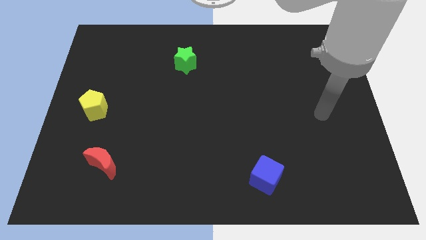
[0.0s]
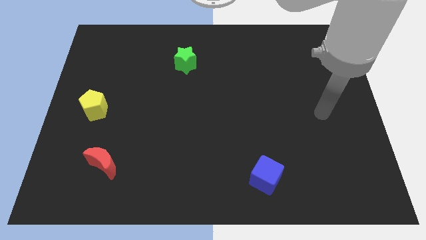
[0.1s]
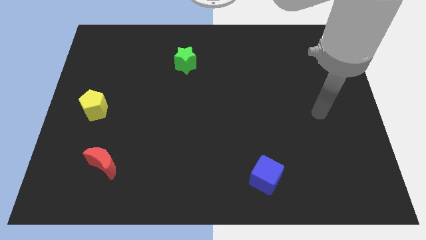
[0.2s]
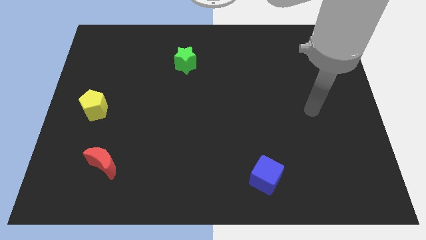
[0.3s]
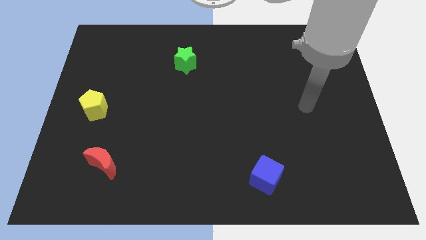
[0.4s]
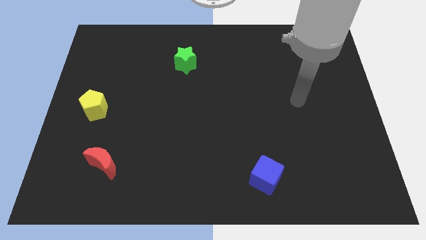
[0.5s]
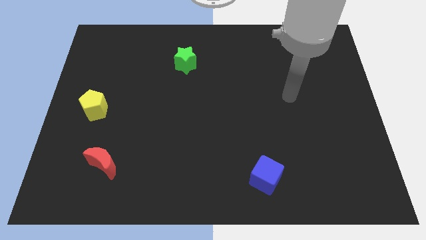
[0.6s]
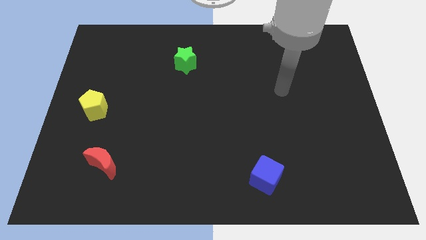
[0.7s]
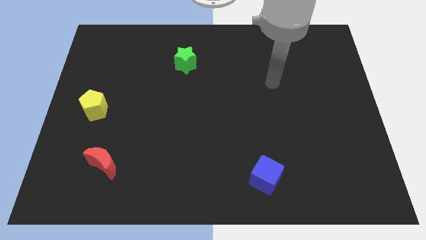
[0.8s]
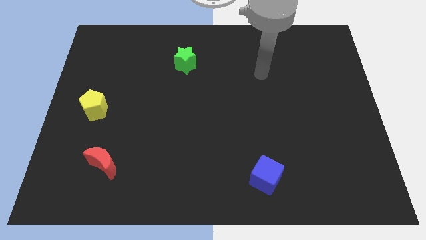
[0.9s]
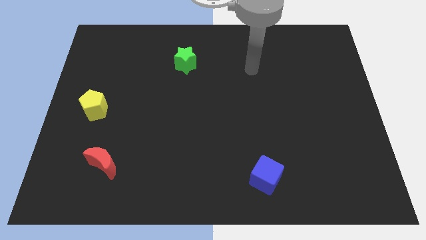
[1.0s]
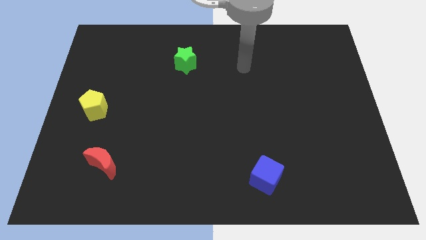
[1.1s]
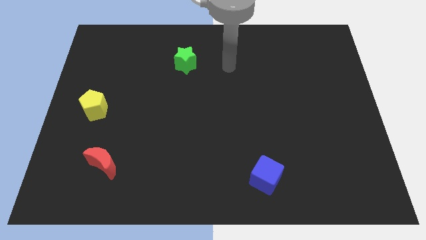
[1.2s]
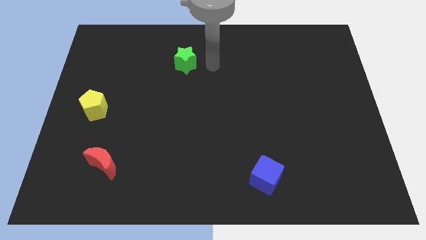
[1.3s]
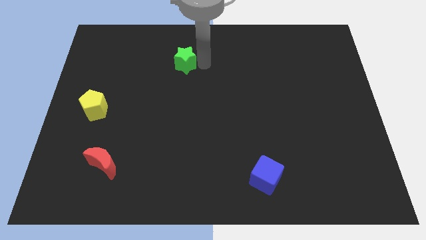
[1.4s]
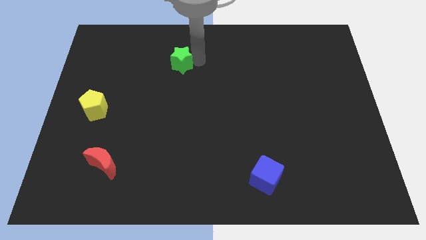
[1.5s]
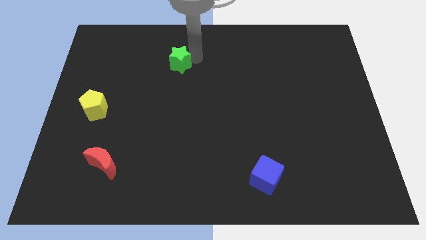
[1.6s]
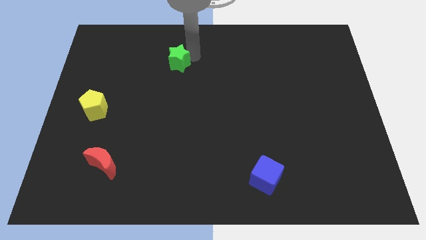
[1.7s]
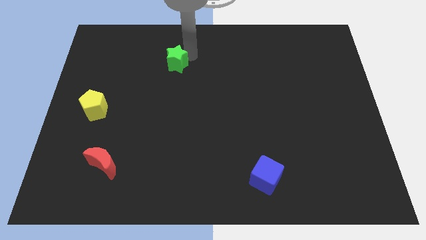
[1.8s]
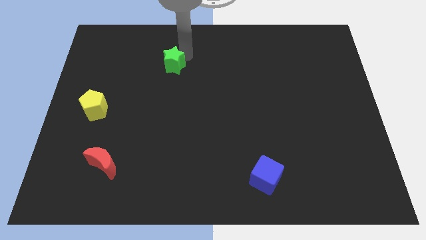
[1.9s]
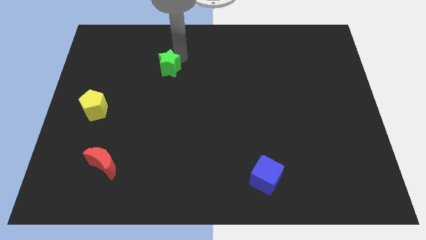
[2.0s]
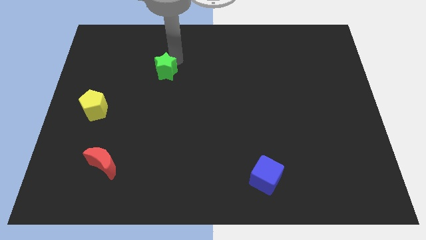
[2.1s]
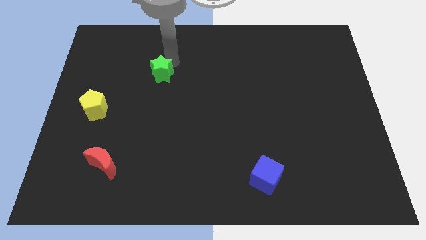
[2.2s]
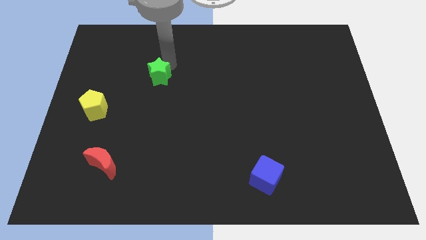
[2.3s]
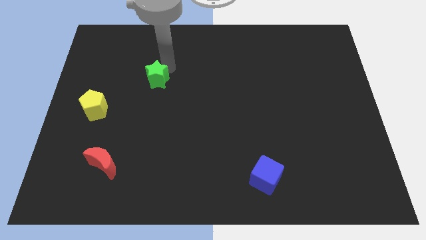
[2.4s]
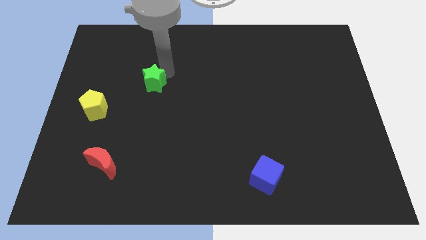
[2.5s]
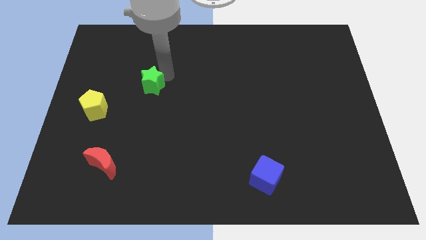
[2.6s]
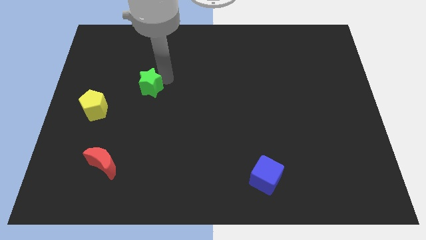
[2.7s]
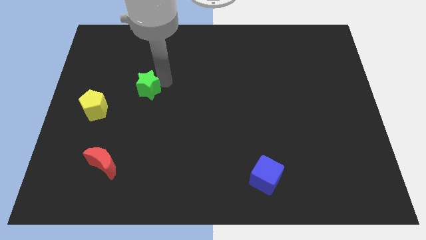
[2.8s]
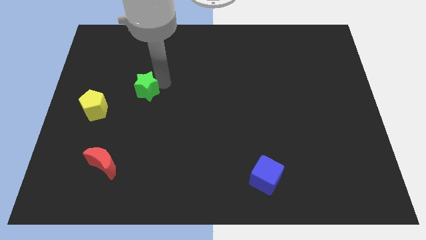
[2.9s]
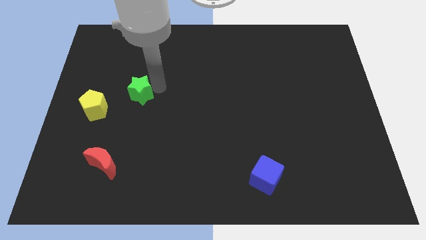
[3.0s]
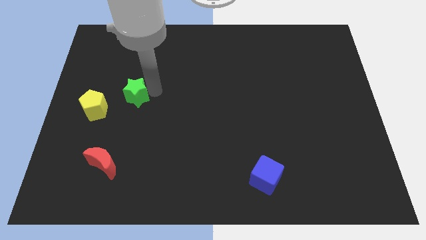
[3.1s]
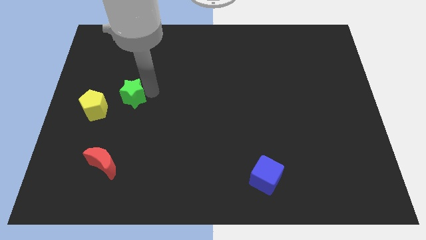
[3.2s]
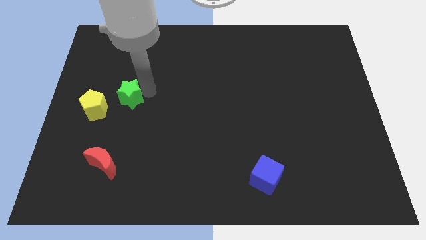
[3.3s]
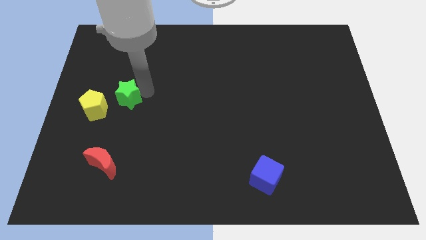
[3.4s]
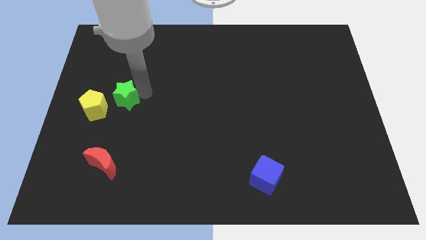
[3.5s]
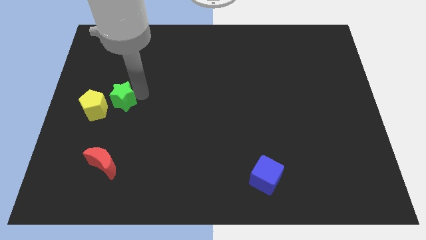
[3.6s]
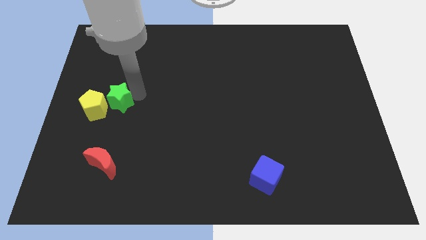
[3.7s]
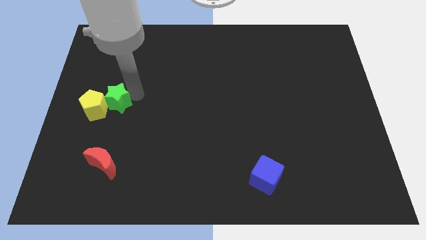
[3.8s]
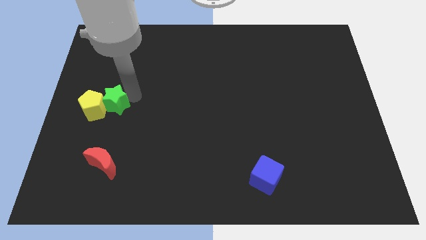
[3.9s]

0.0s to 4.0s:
put the green block to the yellow pentagon

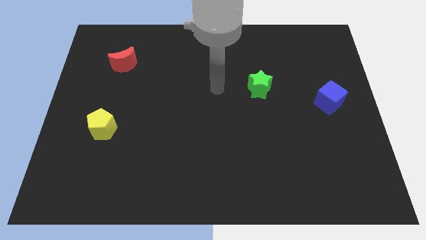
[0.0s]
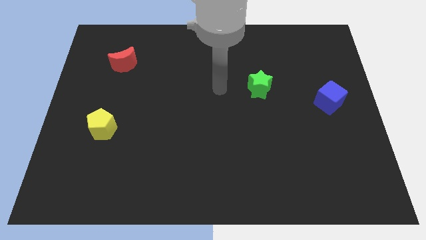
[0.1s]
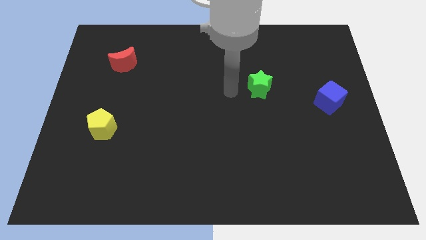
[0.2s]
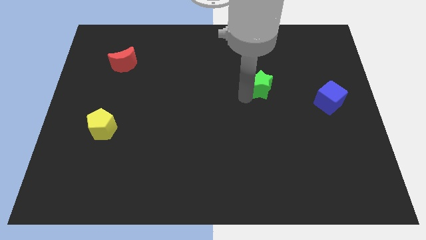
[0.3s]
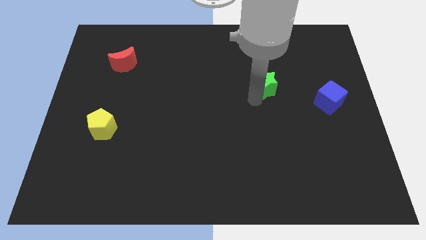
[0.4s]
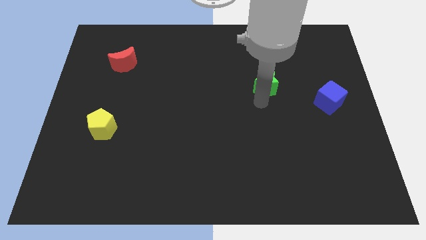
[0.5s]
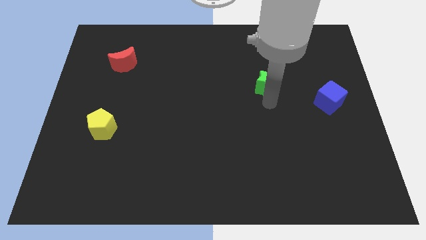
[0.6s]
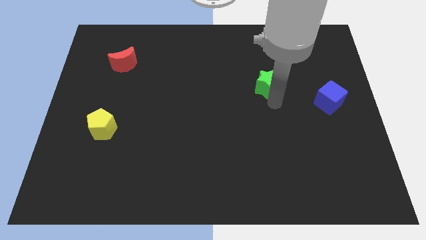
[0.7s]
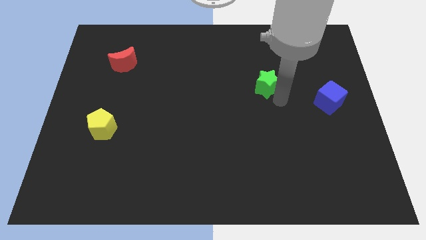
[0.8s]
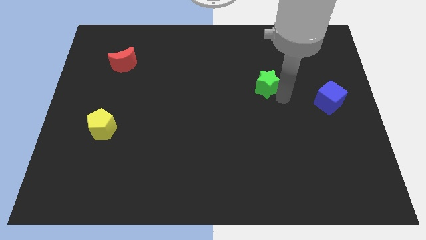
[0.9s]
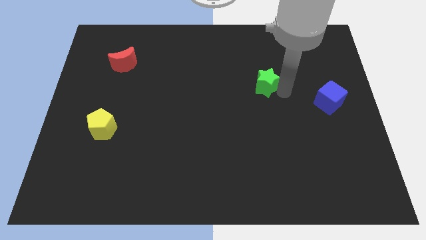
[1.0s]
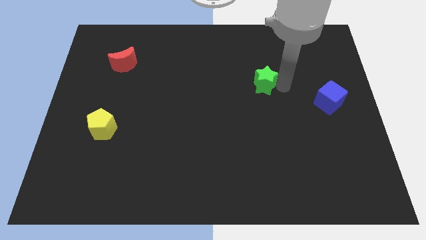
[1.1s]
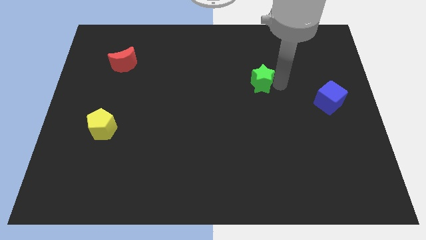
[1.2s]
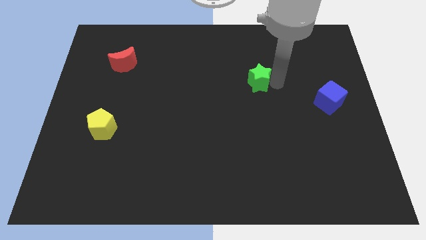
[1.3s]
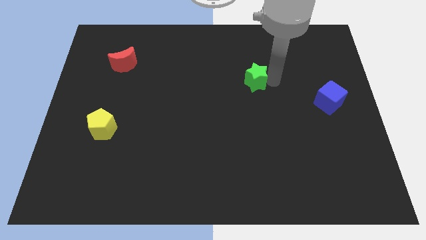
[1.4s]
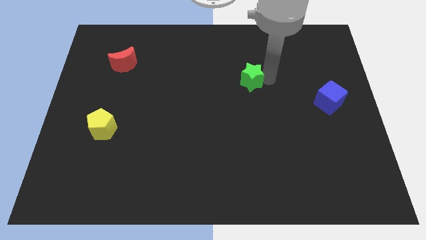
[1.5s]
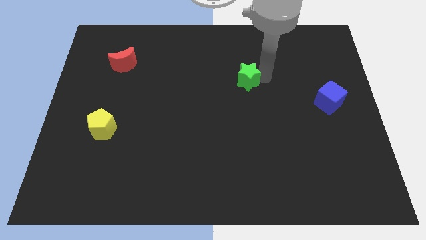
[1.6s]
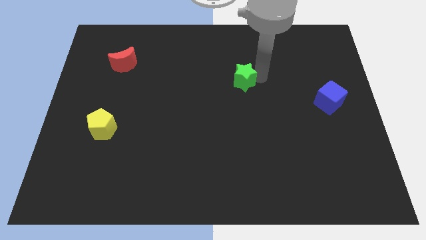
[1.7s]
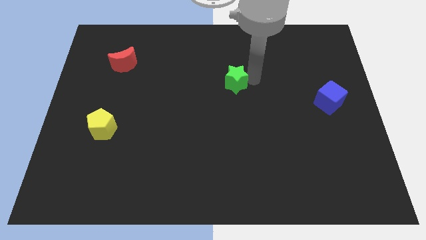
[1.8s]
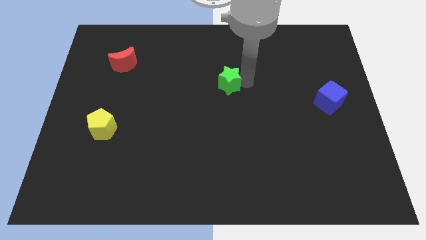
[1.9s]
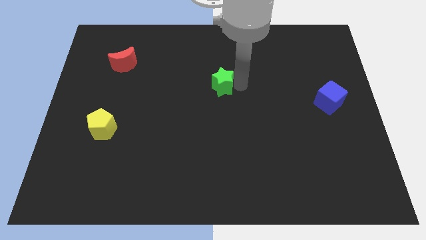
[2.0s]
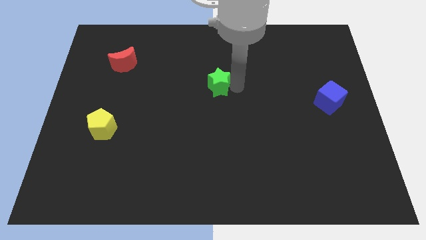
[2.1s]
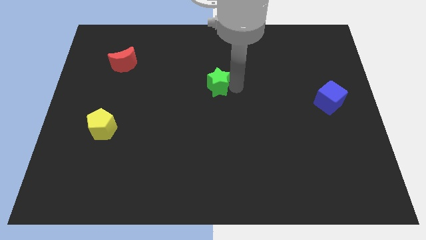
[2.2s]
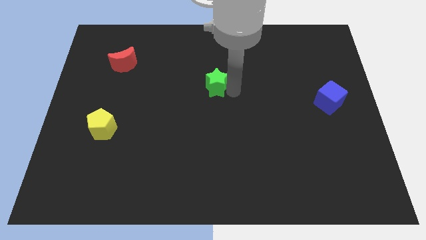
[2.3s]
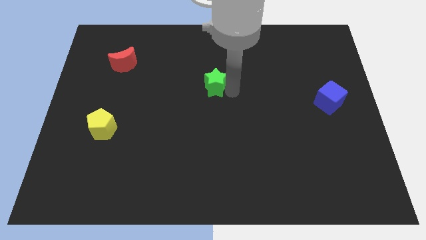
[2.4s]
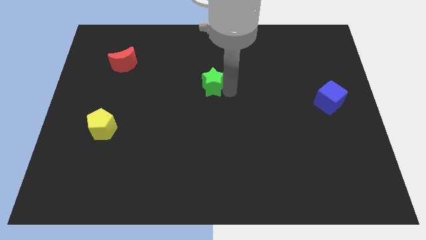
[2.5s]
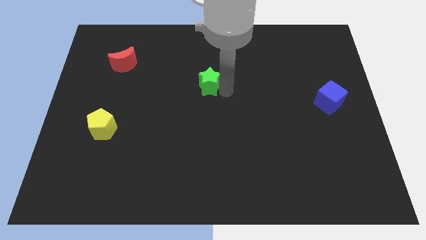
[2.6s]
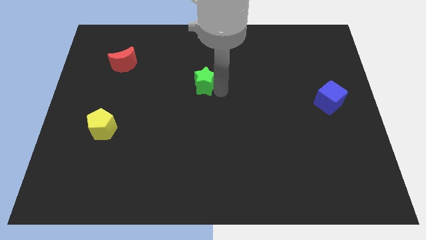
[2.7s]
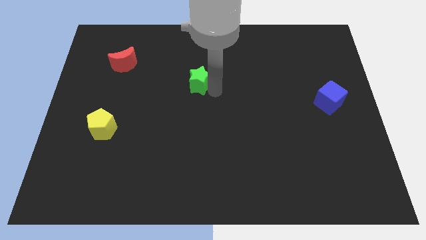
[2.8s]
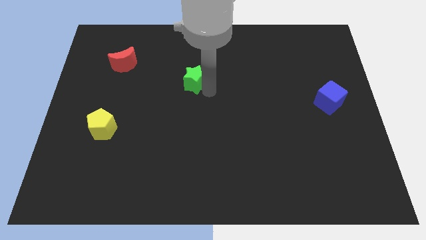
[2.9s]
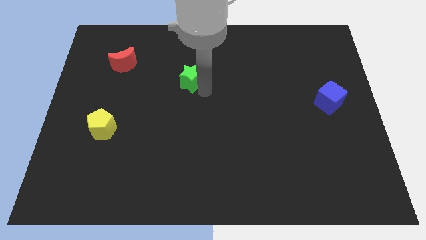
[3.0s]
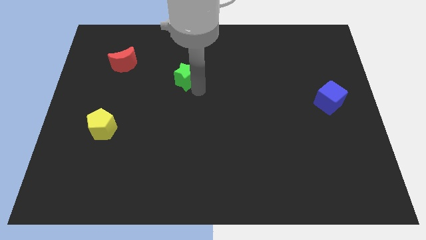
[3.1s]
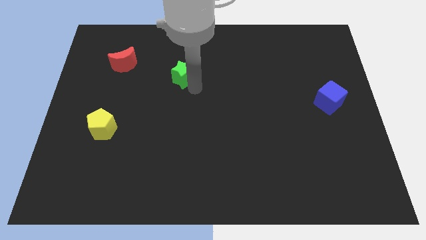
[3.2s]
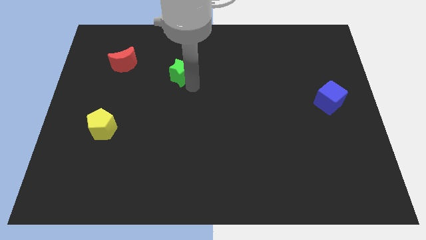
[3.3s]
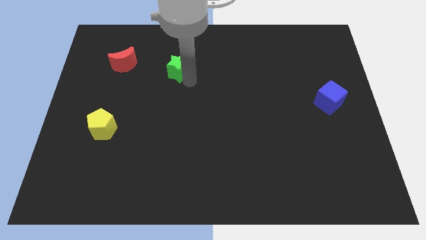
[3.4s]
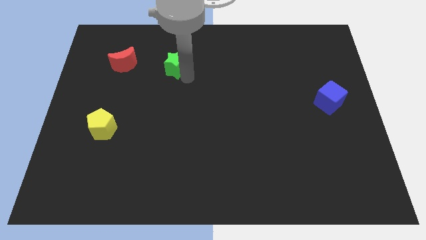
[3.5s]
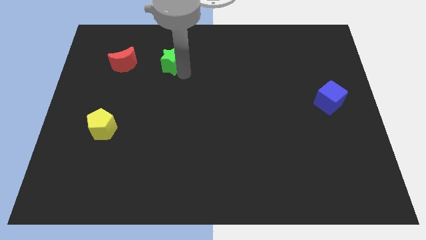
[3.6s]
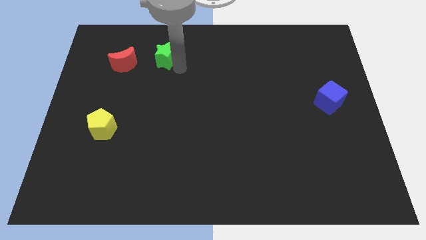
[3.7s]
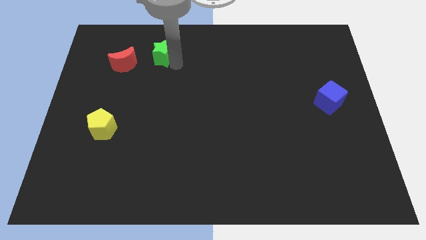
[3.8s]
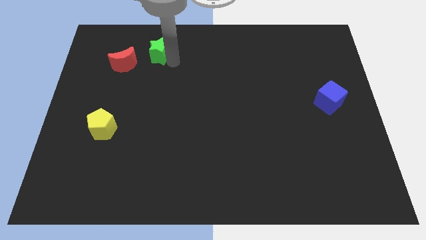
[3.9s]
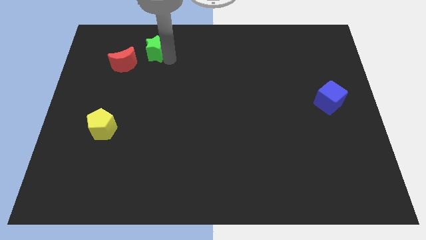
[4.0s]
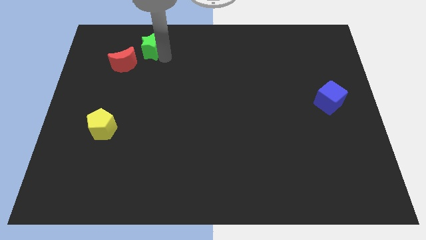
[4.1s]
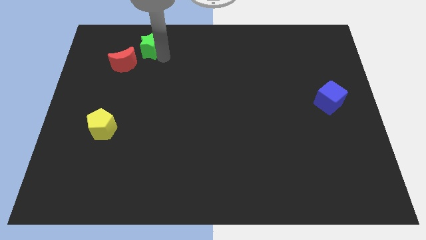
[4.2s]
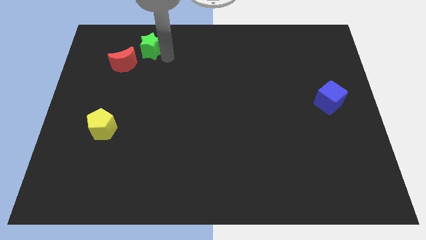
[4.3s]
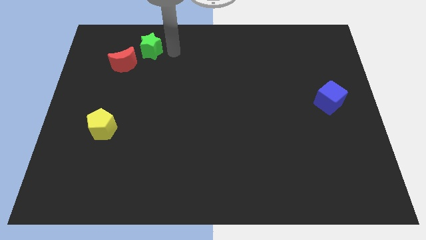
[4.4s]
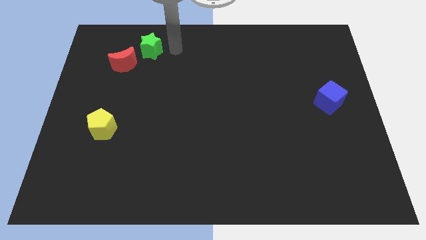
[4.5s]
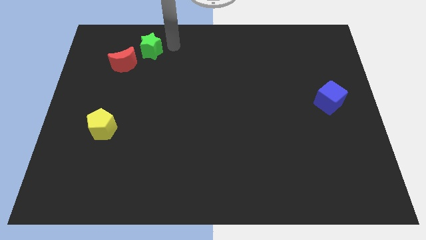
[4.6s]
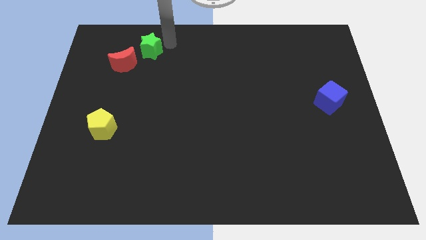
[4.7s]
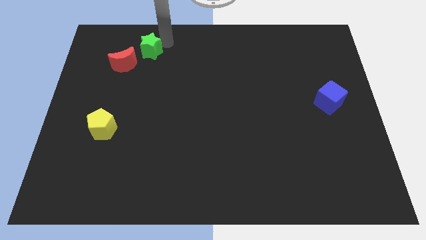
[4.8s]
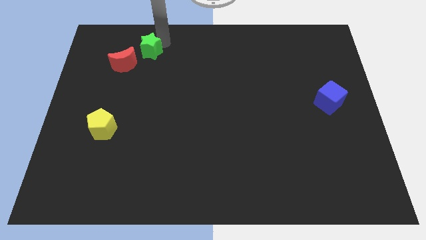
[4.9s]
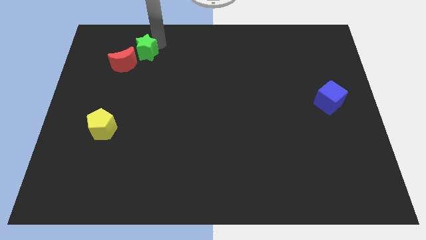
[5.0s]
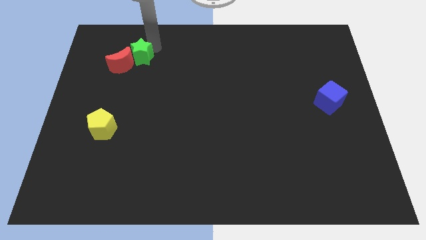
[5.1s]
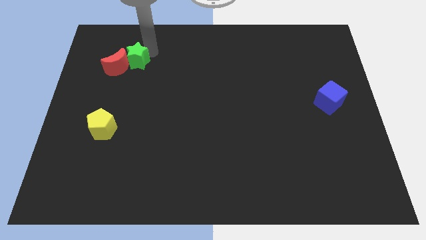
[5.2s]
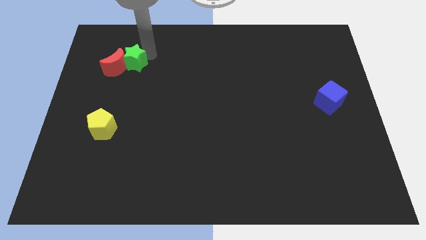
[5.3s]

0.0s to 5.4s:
move the star towards the red block
